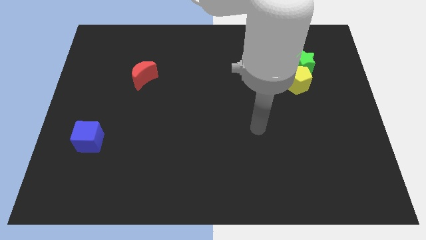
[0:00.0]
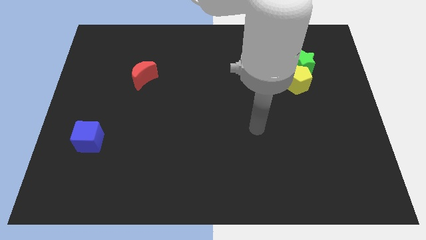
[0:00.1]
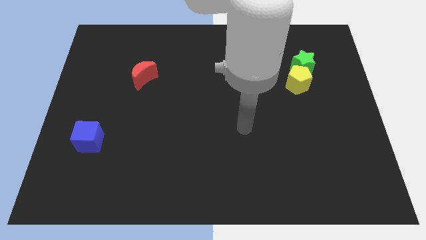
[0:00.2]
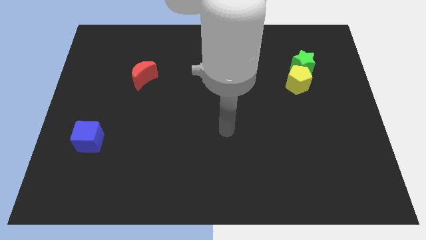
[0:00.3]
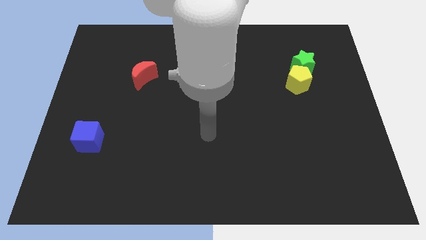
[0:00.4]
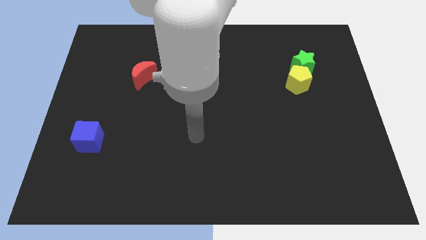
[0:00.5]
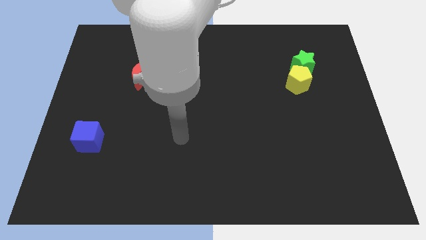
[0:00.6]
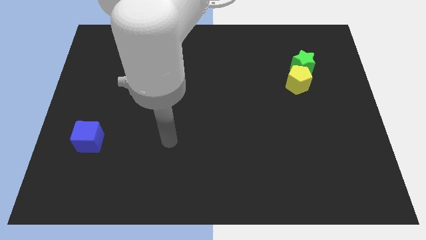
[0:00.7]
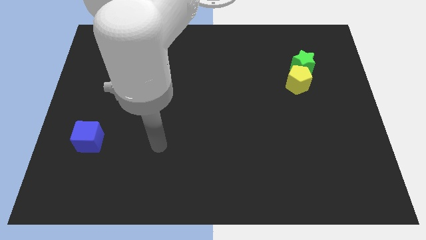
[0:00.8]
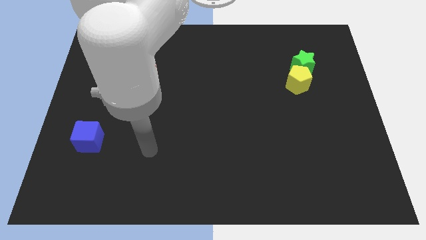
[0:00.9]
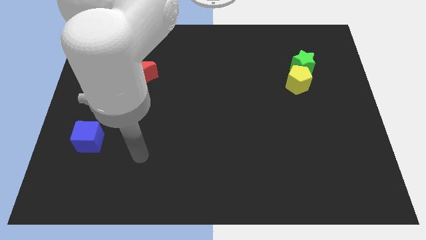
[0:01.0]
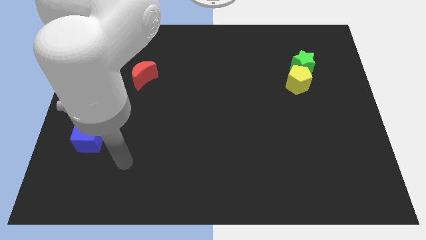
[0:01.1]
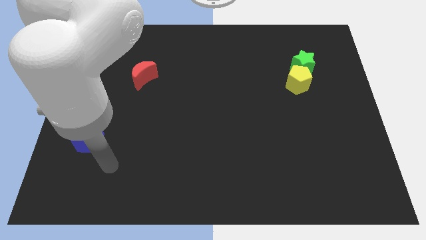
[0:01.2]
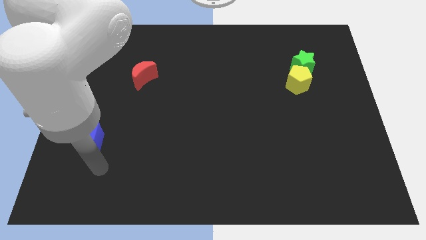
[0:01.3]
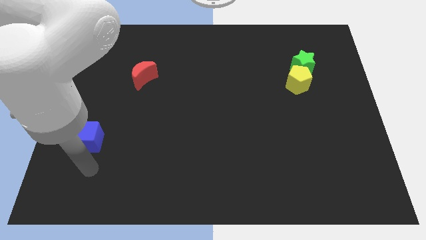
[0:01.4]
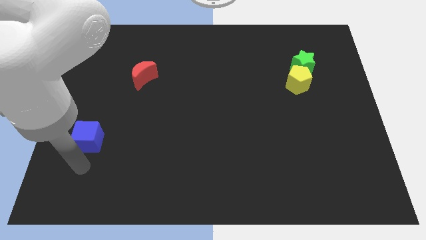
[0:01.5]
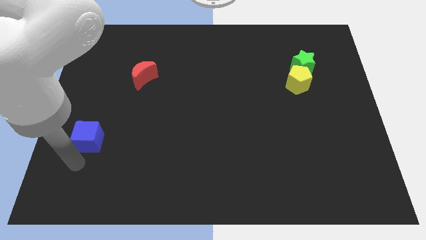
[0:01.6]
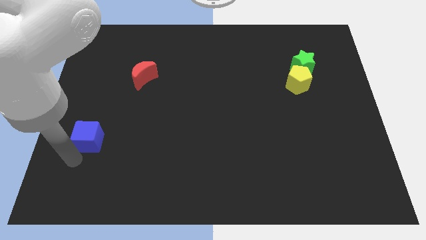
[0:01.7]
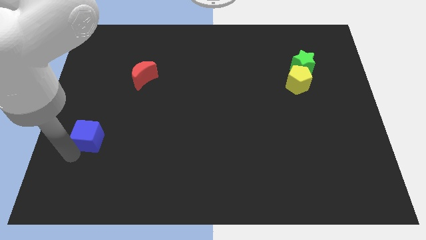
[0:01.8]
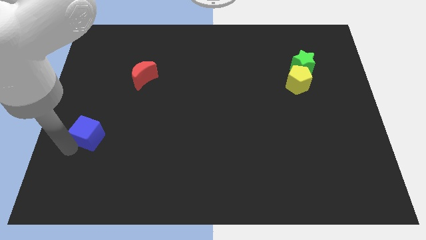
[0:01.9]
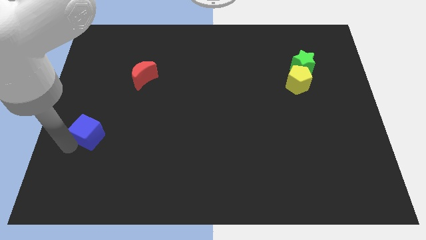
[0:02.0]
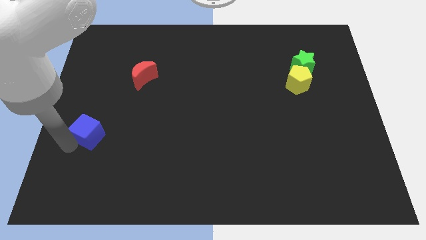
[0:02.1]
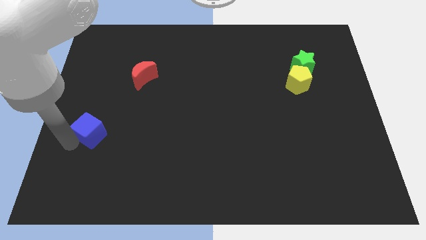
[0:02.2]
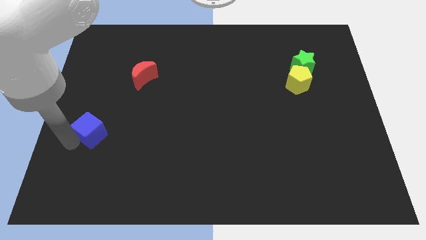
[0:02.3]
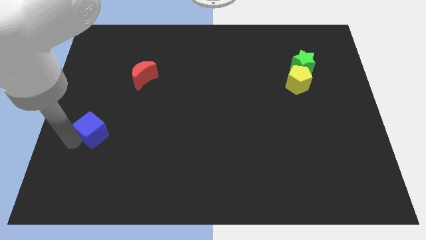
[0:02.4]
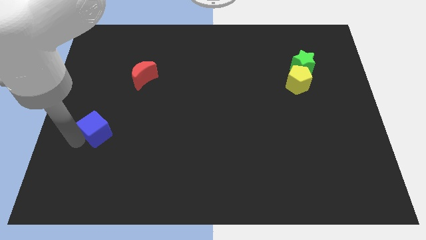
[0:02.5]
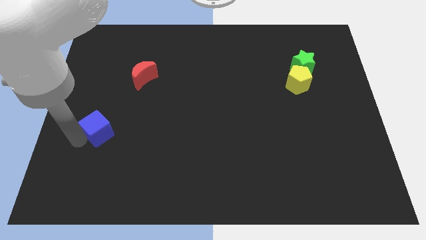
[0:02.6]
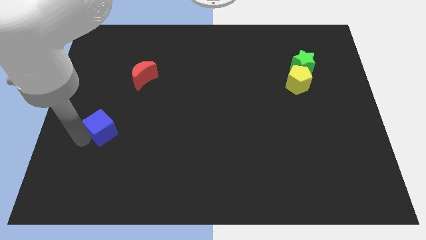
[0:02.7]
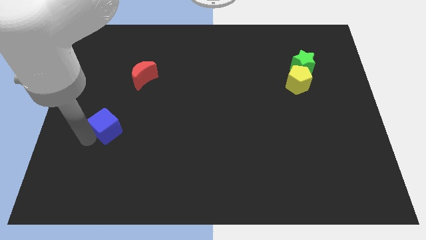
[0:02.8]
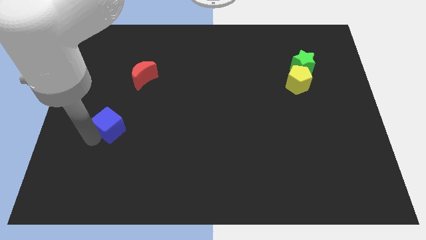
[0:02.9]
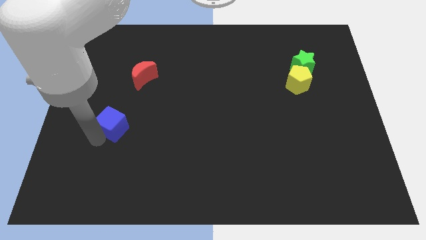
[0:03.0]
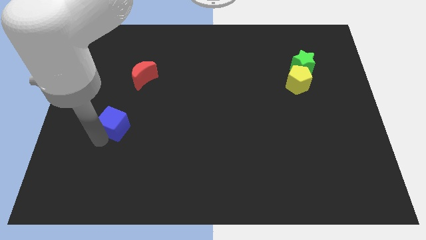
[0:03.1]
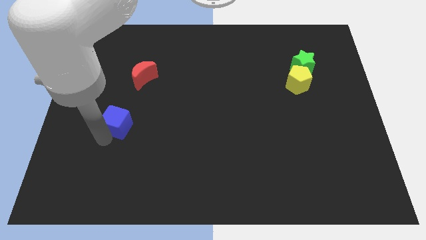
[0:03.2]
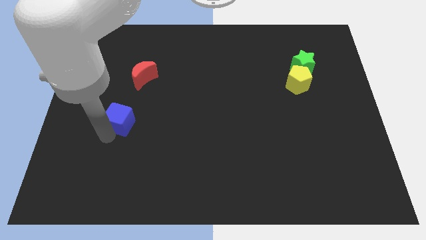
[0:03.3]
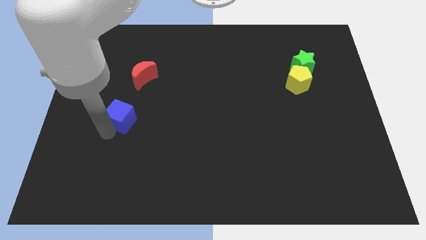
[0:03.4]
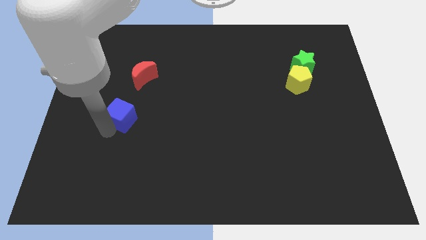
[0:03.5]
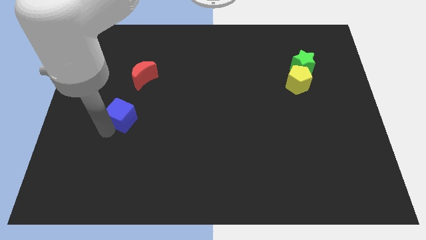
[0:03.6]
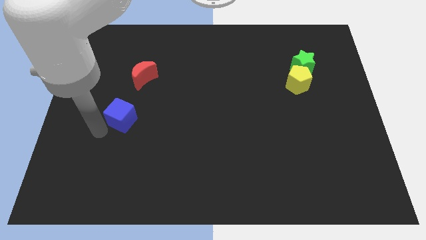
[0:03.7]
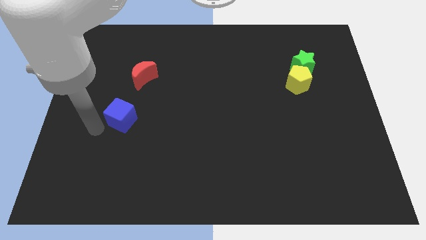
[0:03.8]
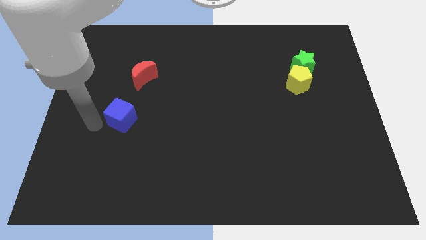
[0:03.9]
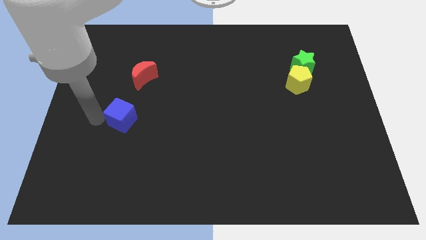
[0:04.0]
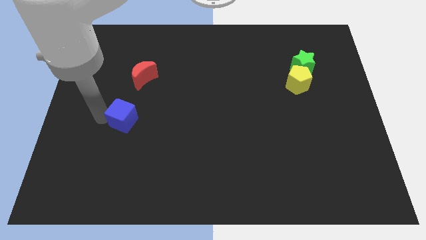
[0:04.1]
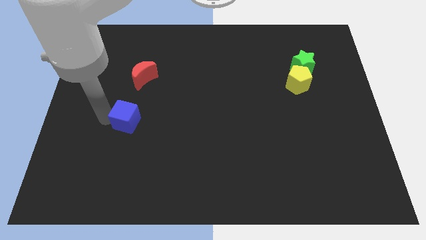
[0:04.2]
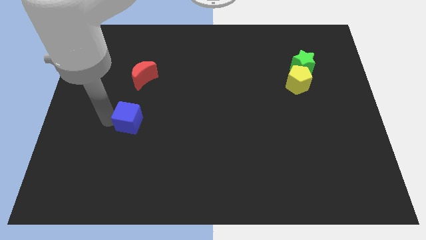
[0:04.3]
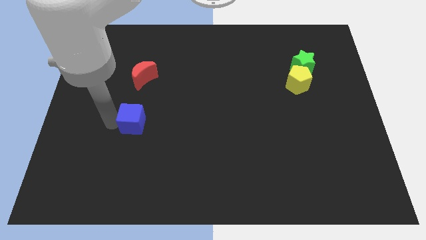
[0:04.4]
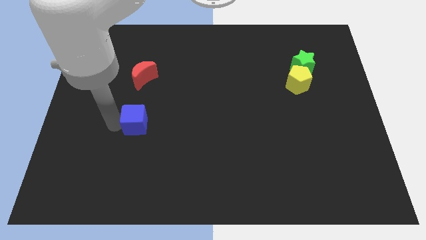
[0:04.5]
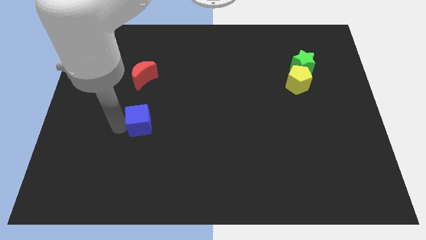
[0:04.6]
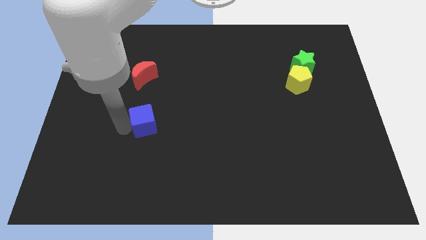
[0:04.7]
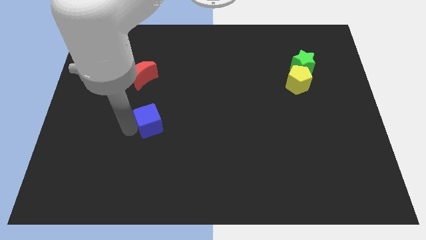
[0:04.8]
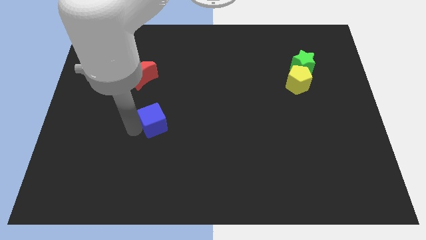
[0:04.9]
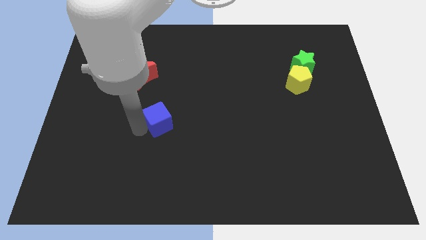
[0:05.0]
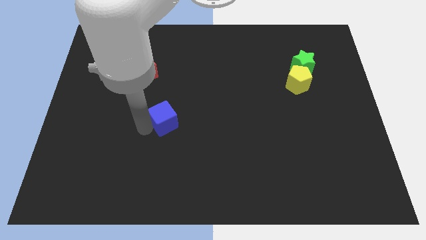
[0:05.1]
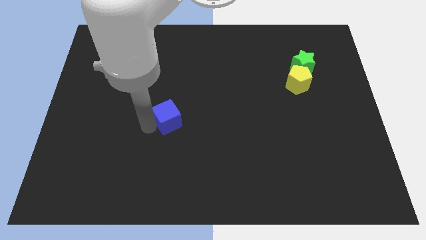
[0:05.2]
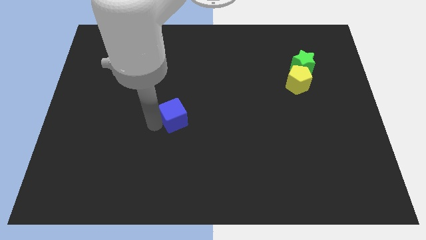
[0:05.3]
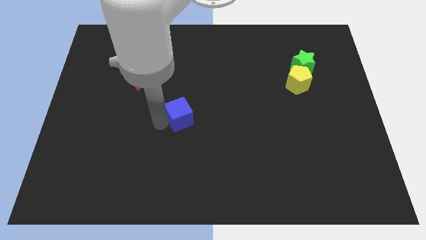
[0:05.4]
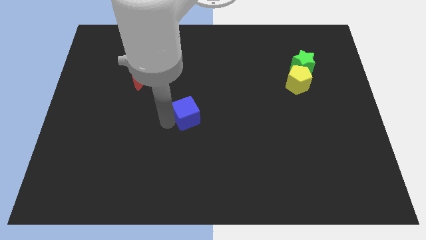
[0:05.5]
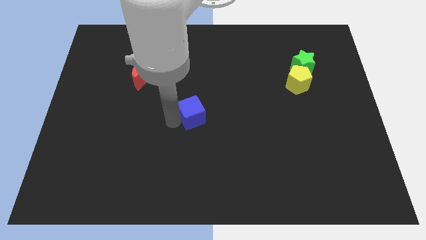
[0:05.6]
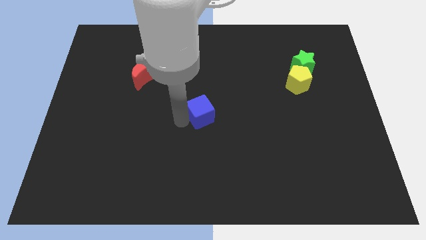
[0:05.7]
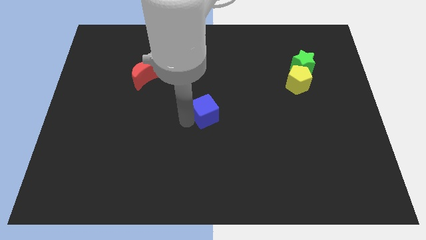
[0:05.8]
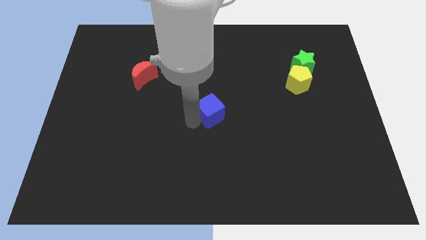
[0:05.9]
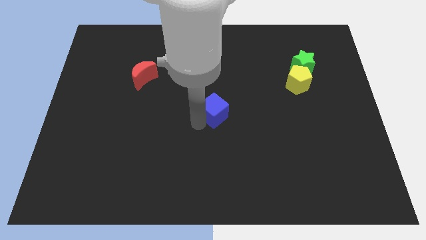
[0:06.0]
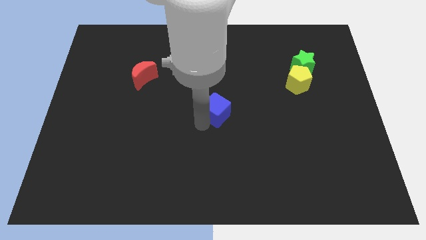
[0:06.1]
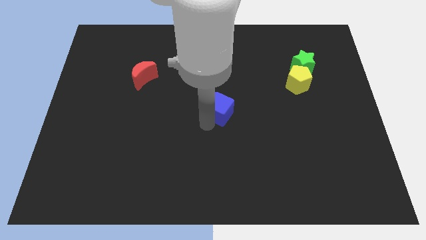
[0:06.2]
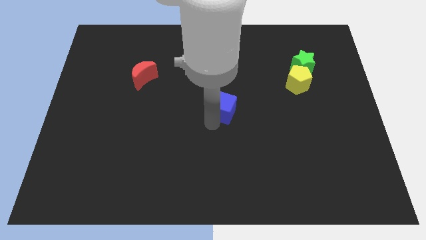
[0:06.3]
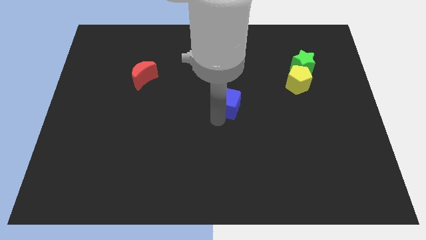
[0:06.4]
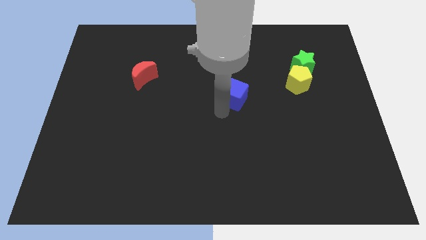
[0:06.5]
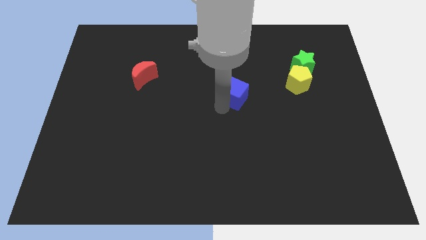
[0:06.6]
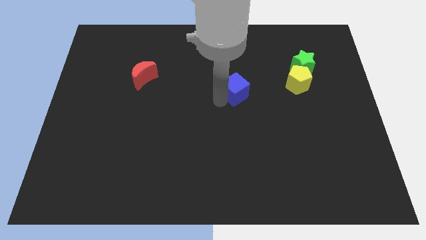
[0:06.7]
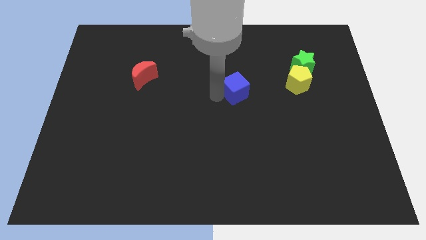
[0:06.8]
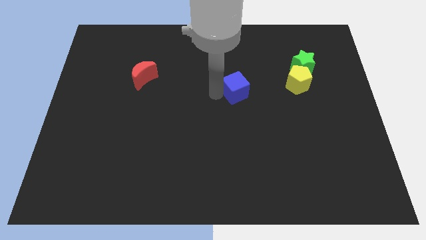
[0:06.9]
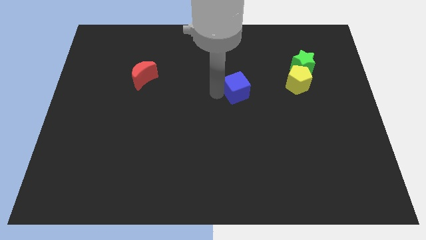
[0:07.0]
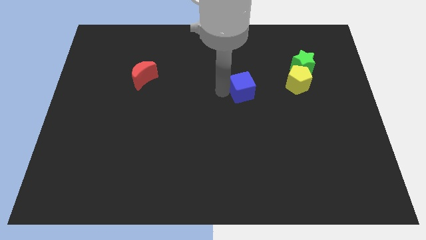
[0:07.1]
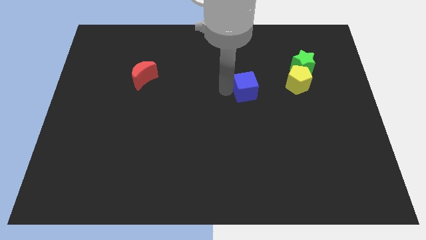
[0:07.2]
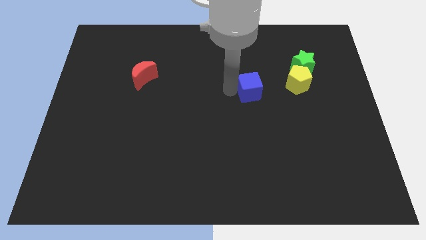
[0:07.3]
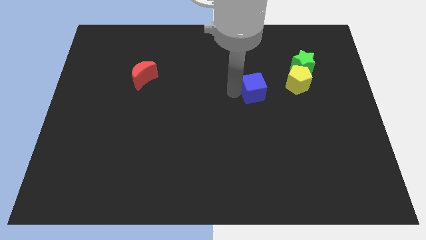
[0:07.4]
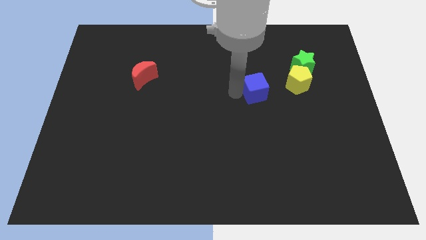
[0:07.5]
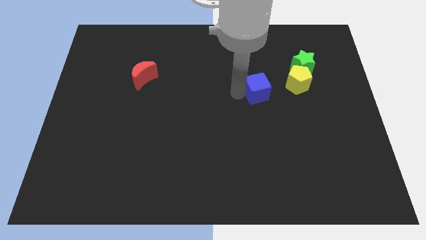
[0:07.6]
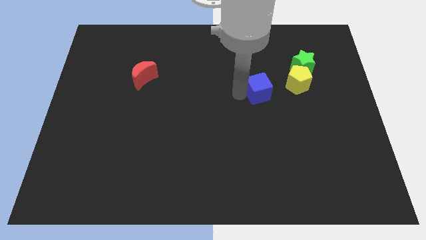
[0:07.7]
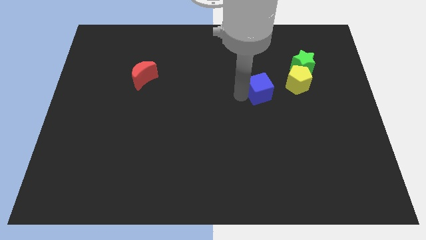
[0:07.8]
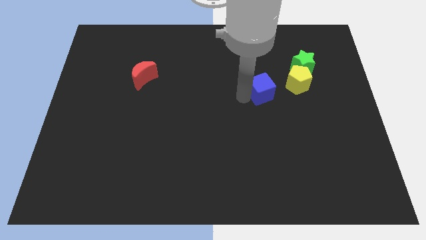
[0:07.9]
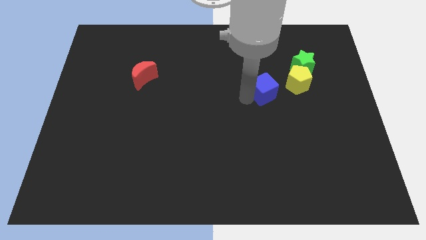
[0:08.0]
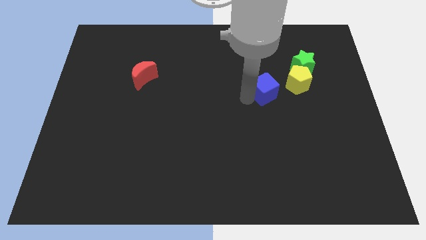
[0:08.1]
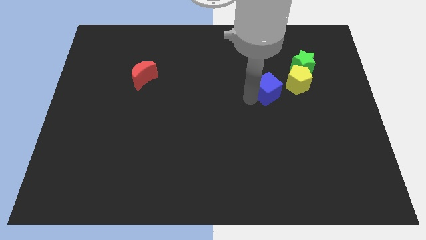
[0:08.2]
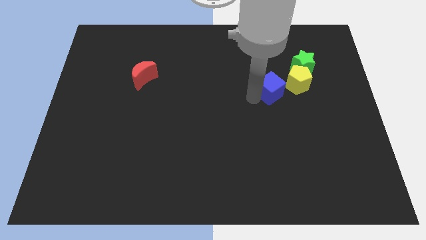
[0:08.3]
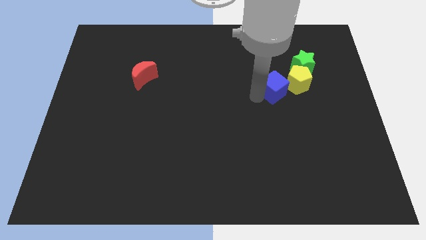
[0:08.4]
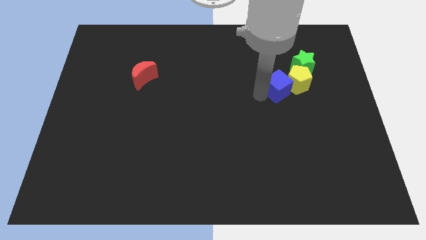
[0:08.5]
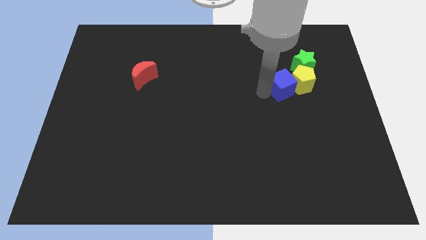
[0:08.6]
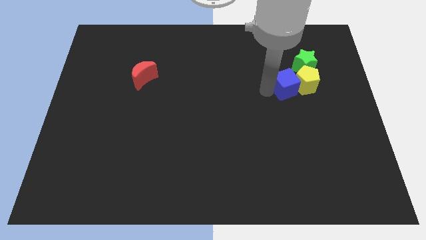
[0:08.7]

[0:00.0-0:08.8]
push the blue block next to the pentagon
